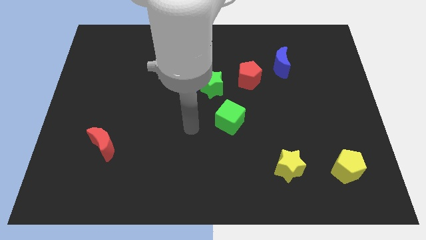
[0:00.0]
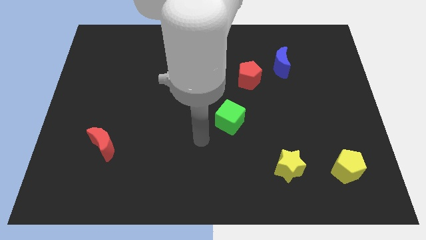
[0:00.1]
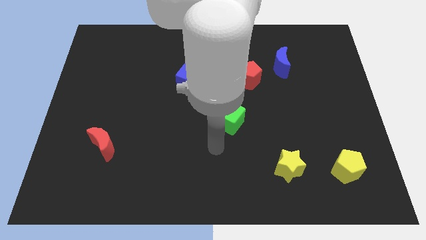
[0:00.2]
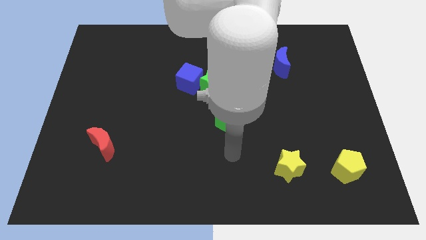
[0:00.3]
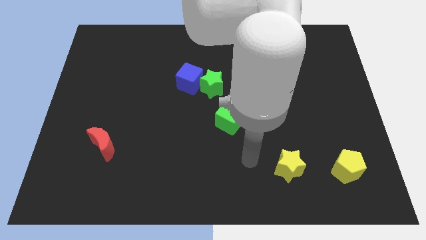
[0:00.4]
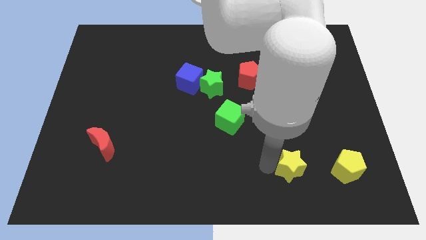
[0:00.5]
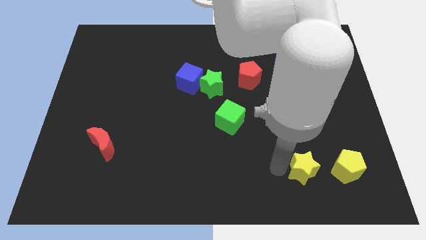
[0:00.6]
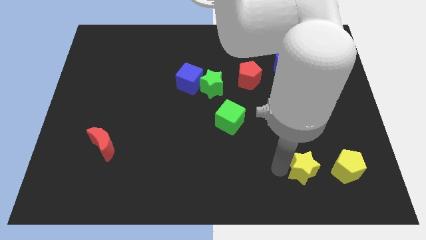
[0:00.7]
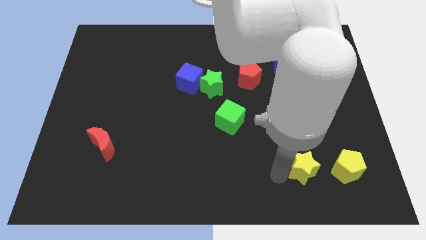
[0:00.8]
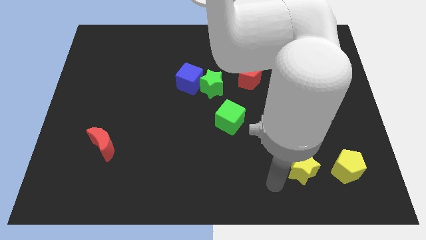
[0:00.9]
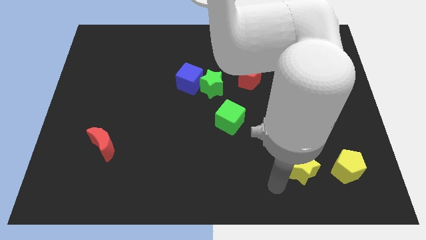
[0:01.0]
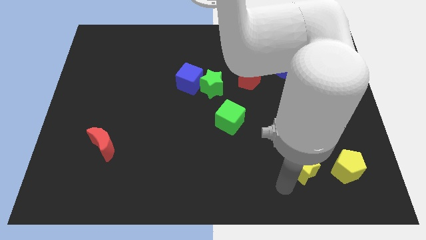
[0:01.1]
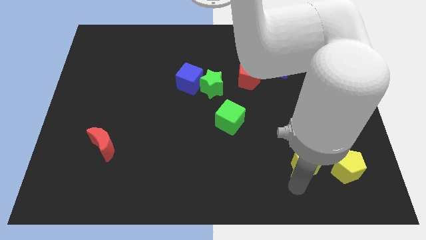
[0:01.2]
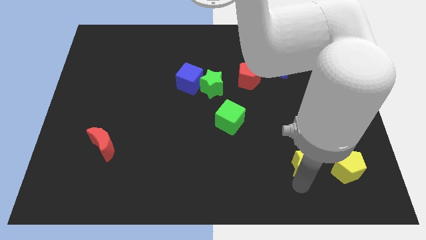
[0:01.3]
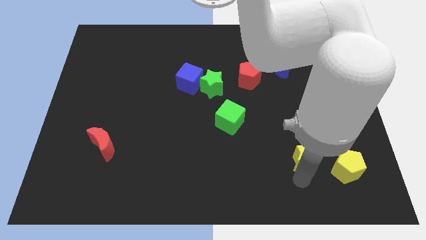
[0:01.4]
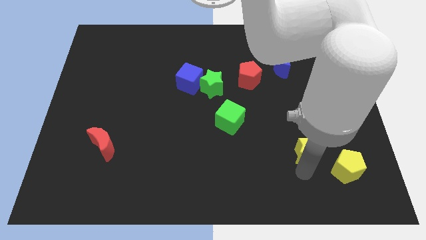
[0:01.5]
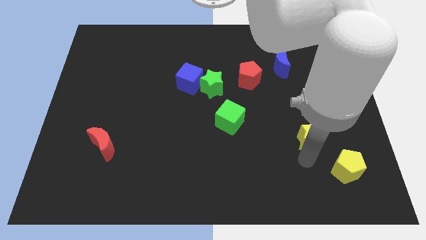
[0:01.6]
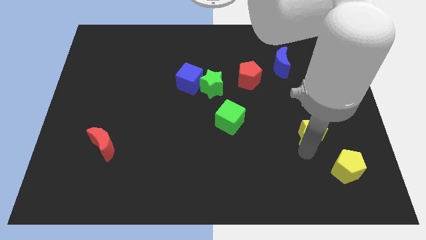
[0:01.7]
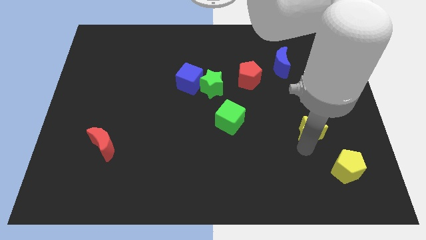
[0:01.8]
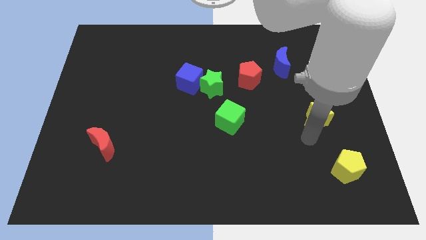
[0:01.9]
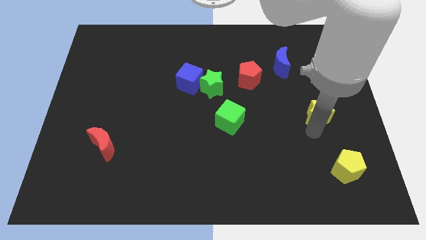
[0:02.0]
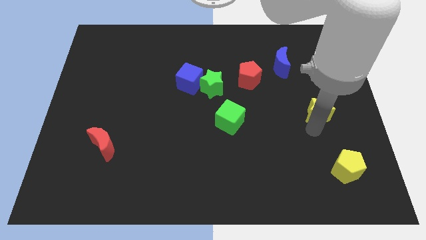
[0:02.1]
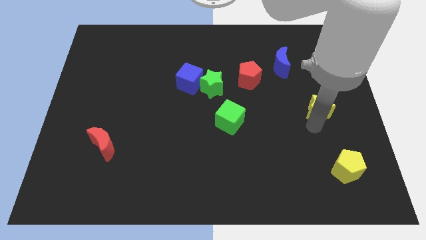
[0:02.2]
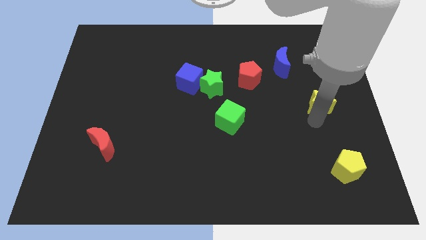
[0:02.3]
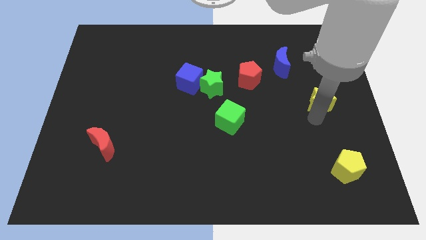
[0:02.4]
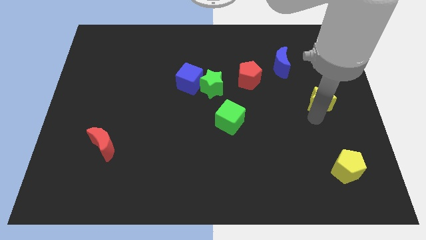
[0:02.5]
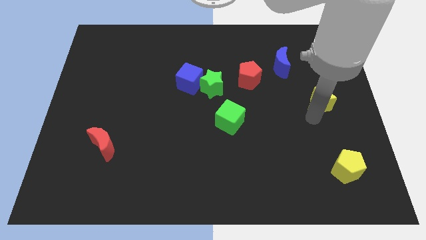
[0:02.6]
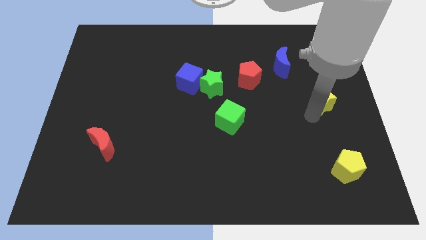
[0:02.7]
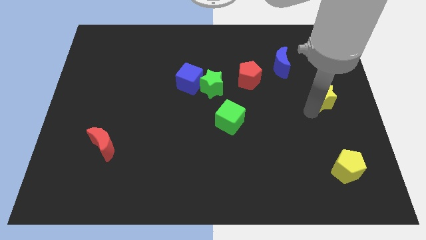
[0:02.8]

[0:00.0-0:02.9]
move the yellow star to the bottom right of the blue crescent

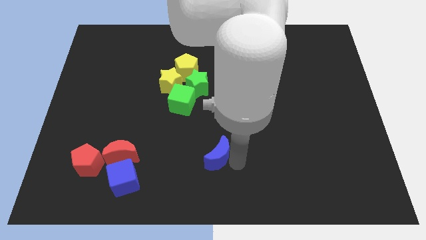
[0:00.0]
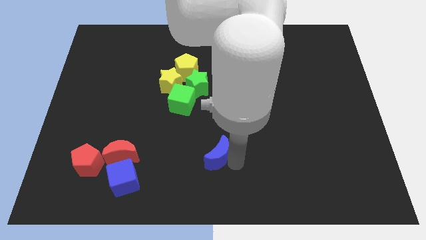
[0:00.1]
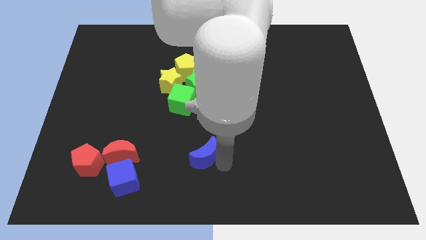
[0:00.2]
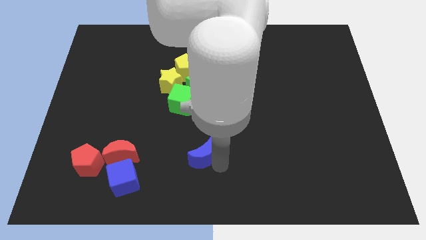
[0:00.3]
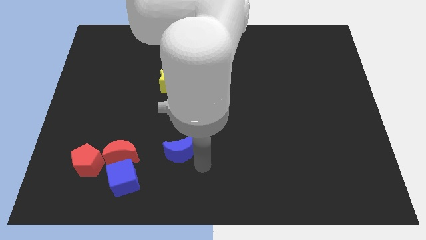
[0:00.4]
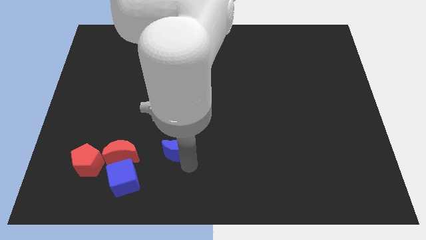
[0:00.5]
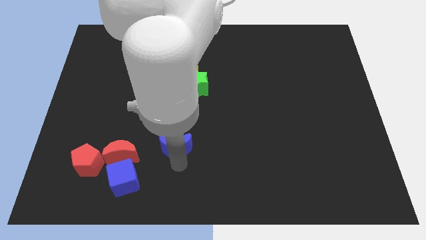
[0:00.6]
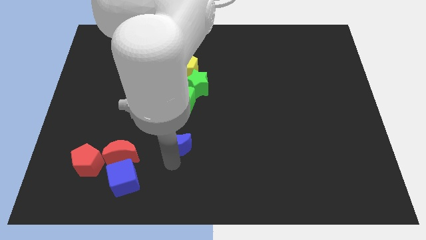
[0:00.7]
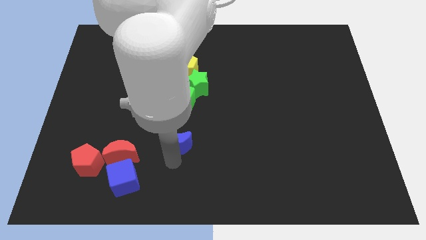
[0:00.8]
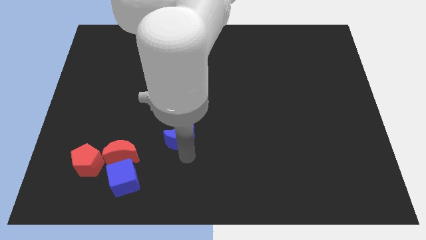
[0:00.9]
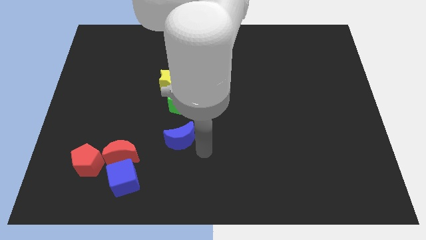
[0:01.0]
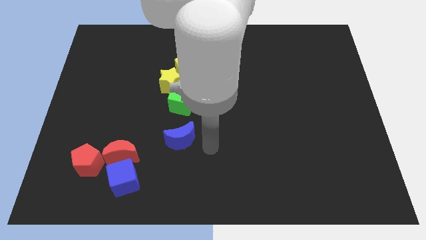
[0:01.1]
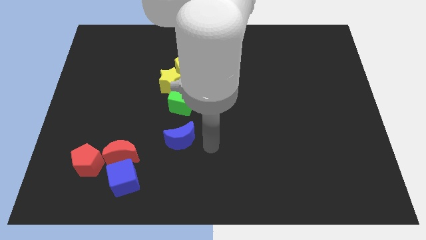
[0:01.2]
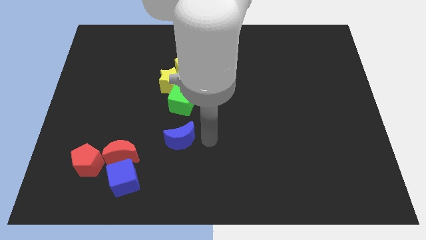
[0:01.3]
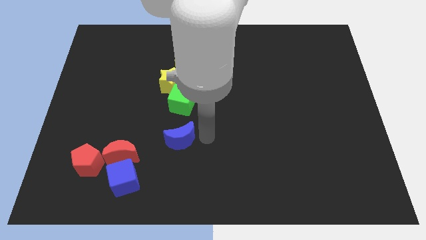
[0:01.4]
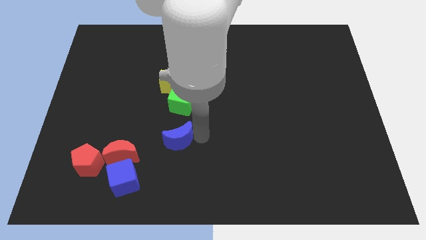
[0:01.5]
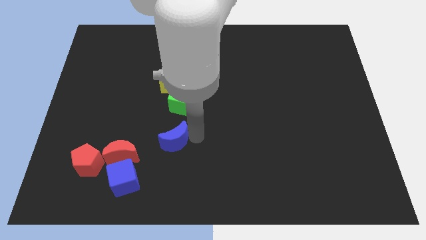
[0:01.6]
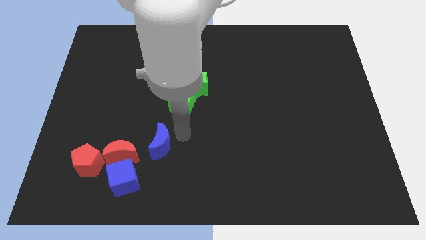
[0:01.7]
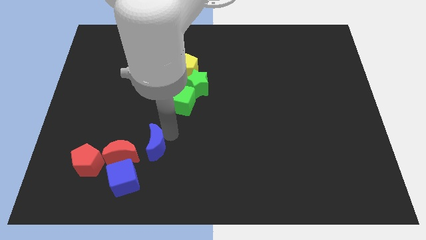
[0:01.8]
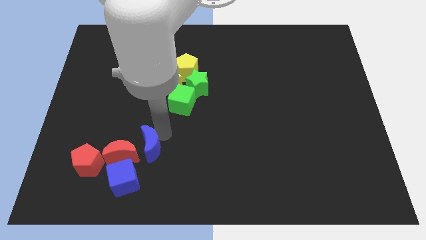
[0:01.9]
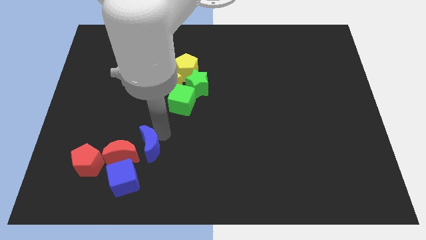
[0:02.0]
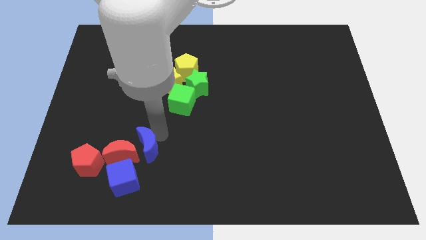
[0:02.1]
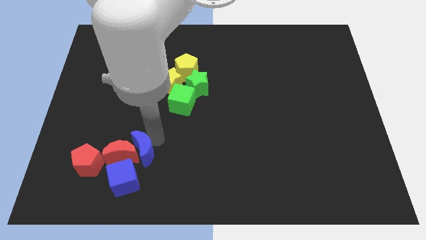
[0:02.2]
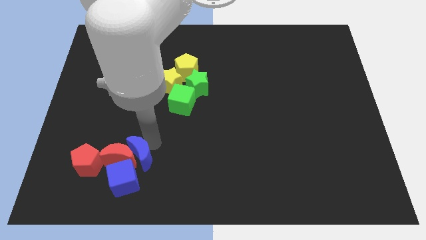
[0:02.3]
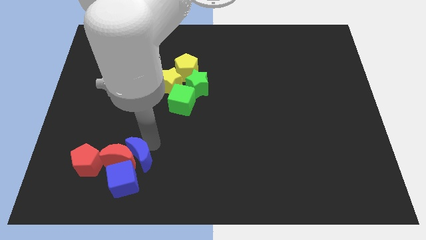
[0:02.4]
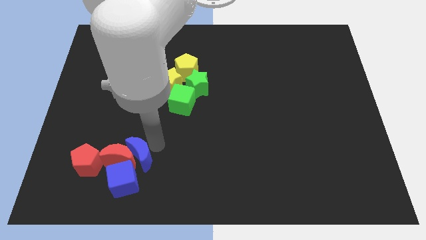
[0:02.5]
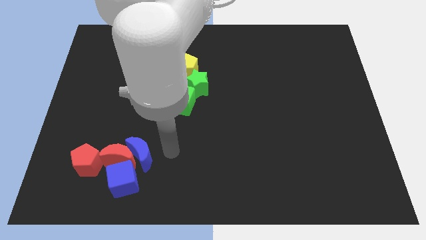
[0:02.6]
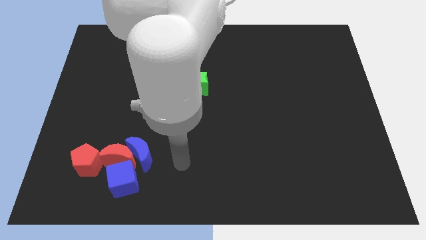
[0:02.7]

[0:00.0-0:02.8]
push the blue crescent into the red crescent

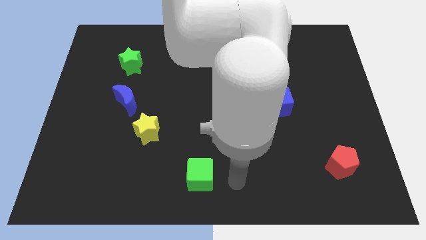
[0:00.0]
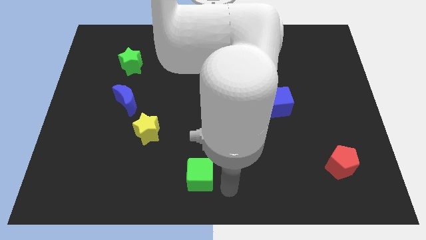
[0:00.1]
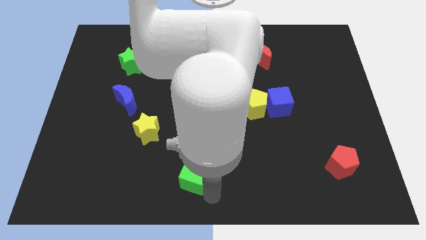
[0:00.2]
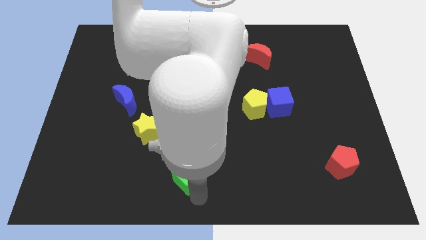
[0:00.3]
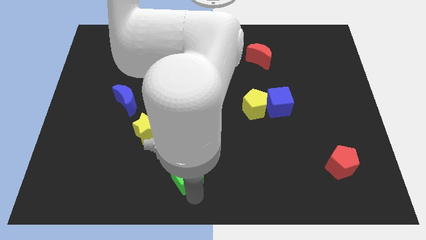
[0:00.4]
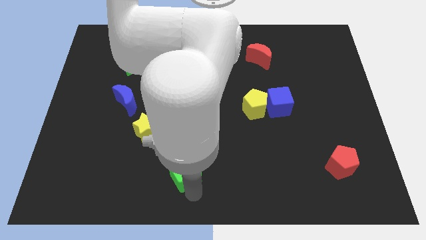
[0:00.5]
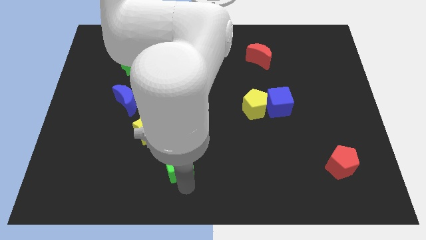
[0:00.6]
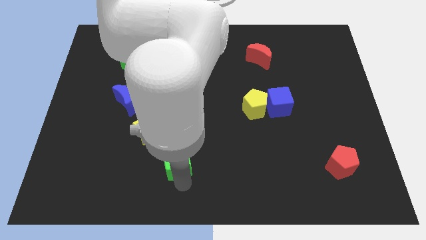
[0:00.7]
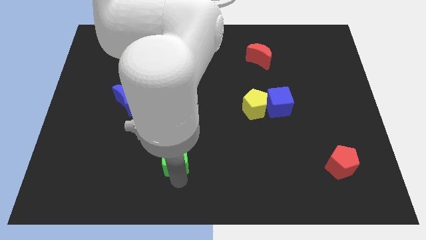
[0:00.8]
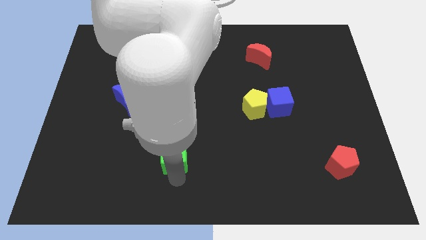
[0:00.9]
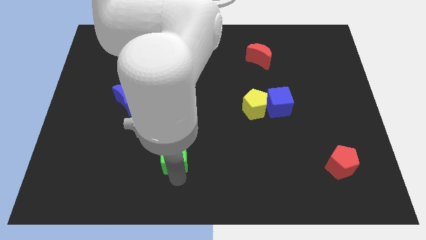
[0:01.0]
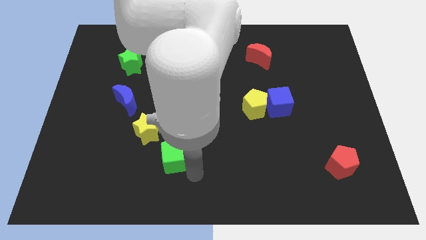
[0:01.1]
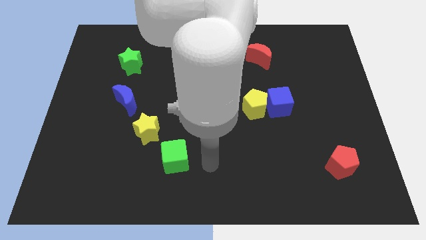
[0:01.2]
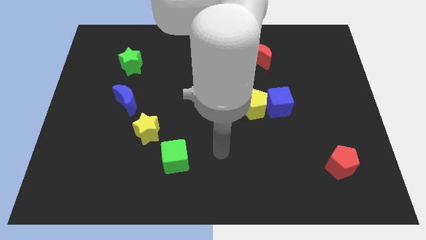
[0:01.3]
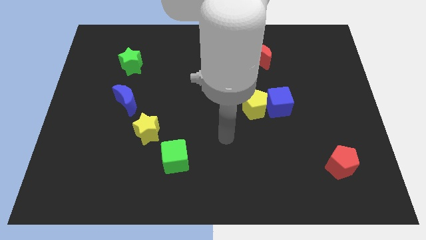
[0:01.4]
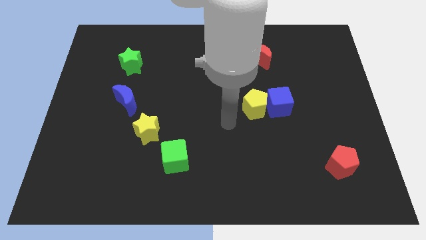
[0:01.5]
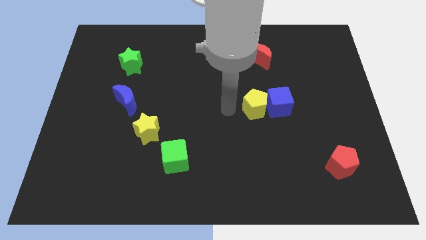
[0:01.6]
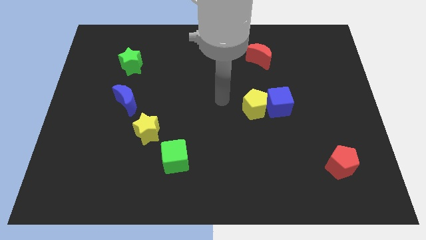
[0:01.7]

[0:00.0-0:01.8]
move the green cube to the bottom right side of the yellow star

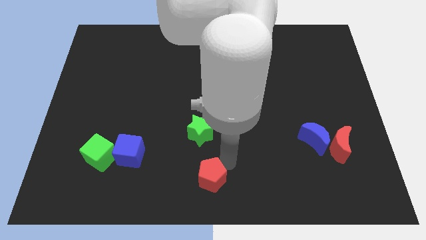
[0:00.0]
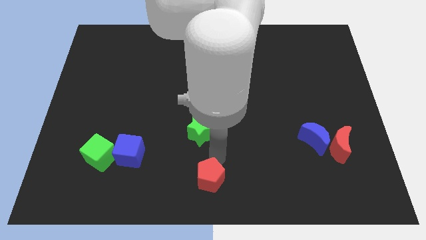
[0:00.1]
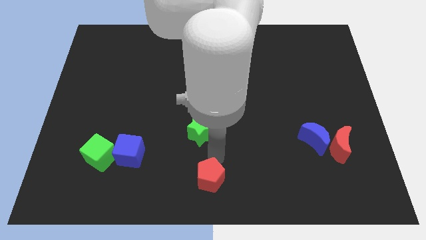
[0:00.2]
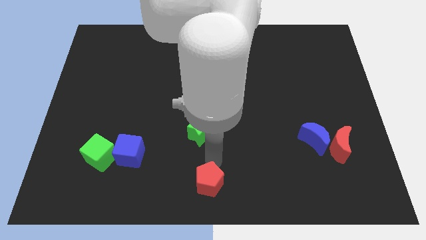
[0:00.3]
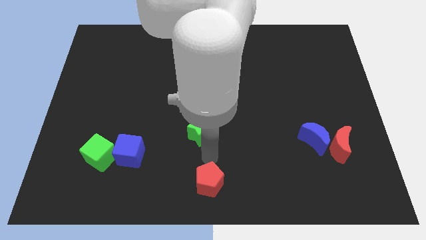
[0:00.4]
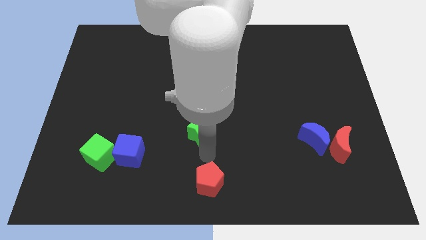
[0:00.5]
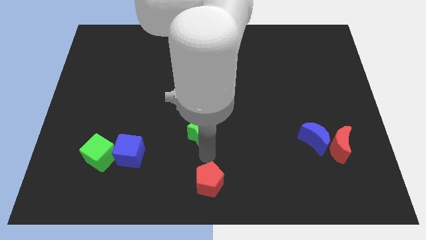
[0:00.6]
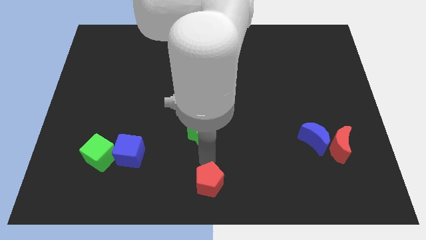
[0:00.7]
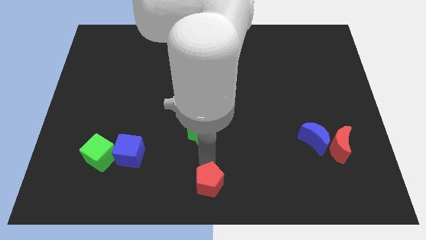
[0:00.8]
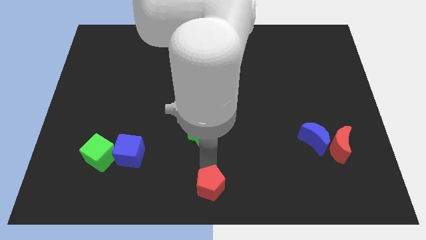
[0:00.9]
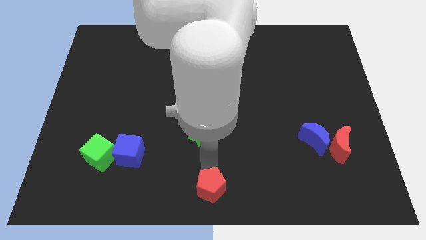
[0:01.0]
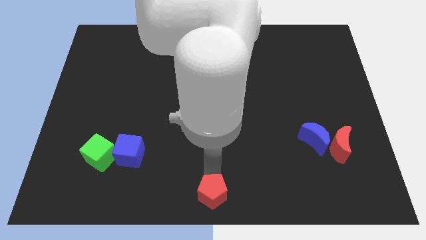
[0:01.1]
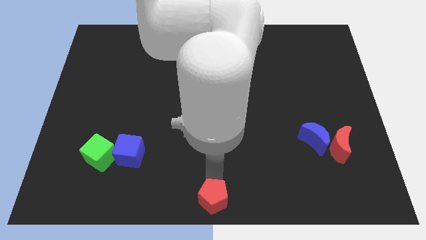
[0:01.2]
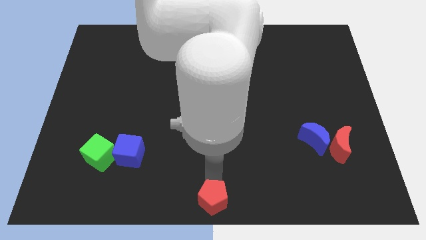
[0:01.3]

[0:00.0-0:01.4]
move the red pentagon to the bottom center of the board
